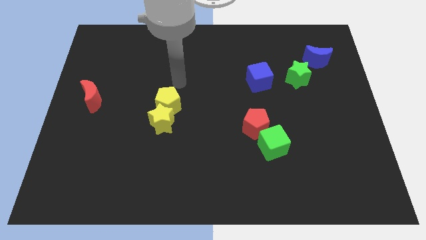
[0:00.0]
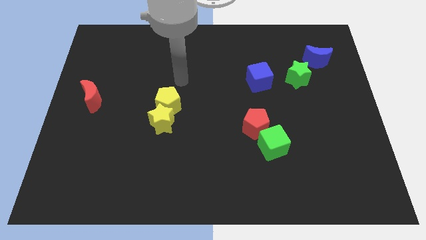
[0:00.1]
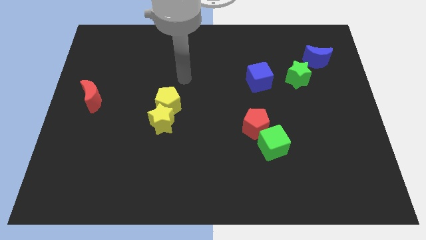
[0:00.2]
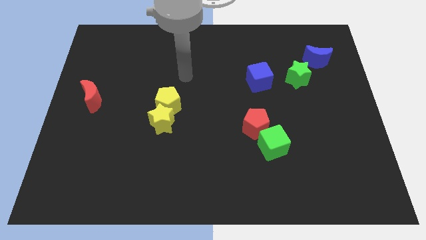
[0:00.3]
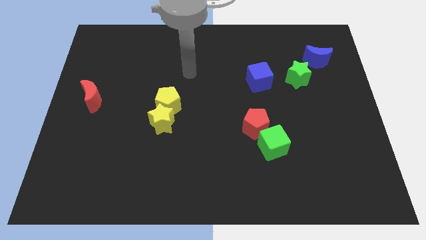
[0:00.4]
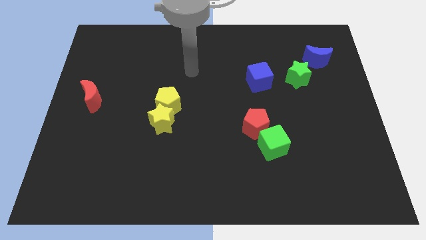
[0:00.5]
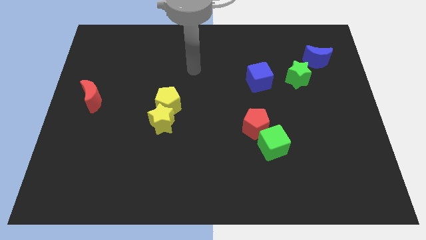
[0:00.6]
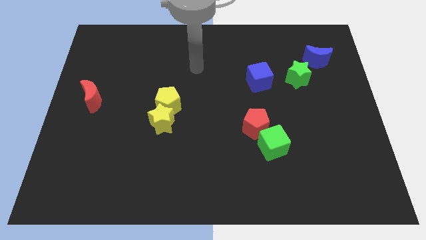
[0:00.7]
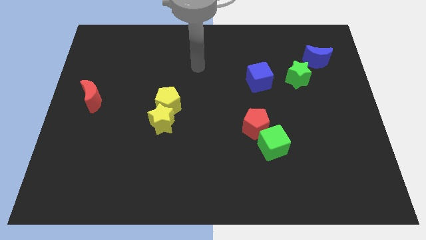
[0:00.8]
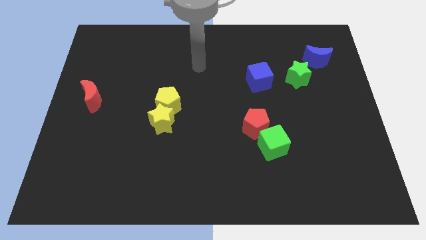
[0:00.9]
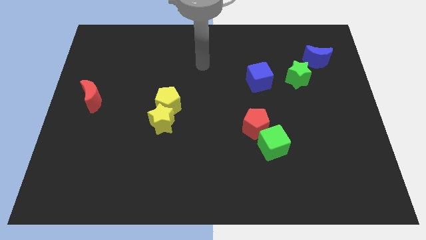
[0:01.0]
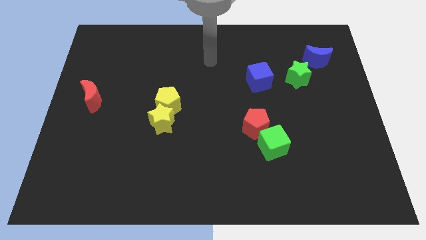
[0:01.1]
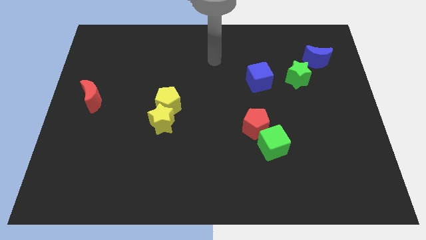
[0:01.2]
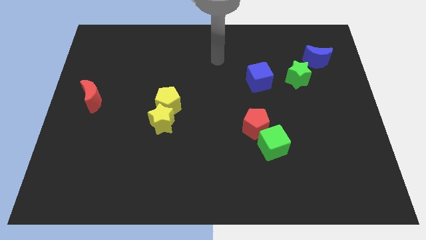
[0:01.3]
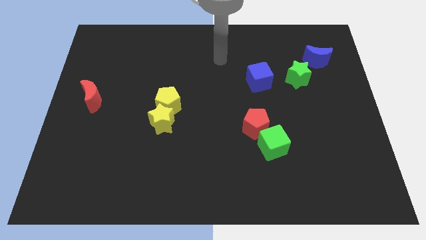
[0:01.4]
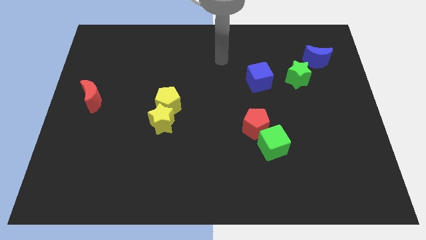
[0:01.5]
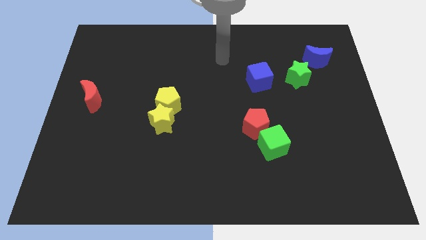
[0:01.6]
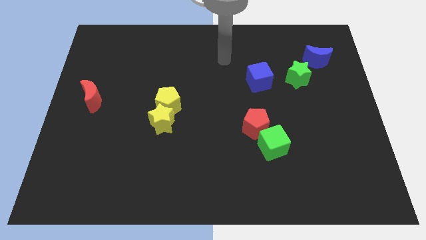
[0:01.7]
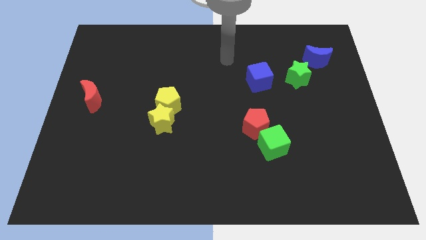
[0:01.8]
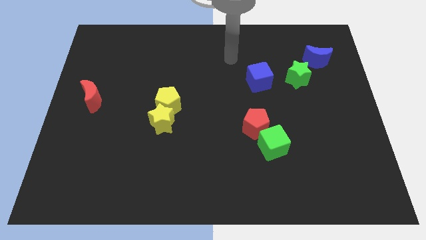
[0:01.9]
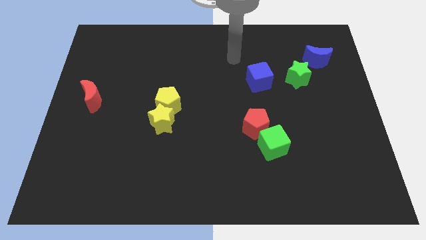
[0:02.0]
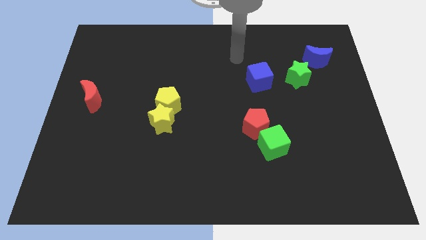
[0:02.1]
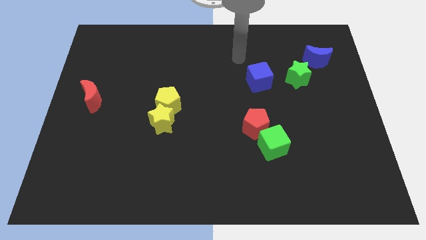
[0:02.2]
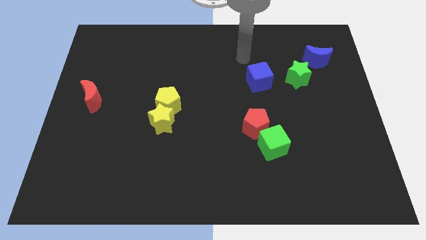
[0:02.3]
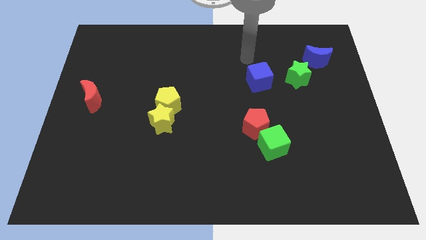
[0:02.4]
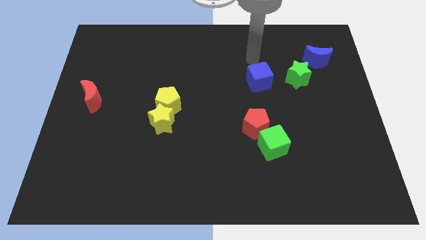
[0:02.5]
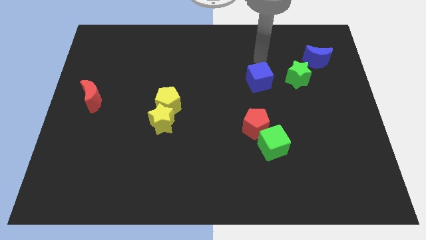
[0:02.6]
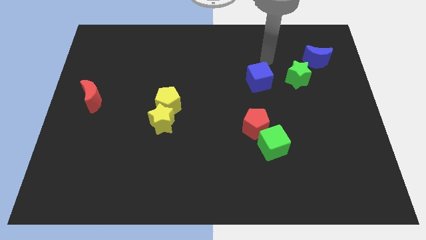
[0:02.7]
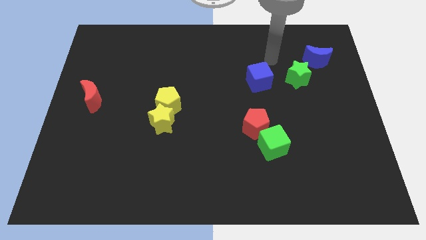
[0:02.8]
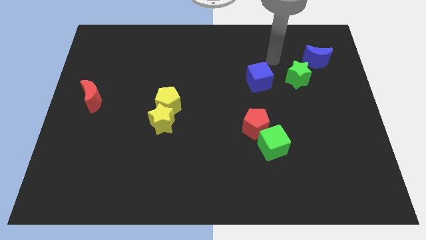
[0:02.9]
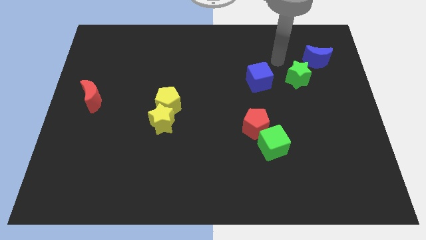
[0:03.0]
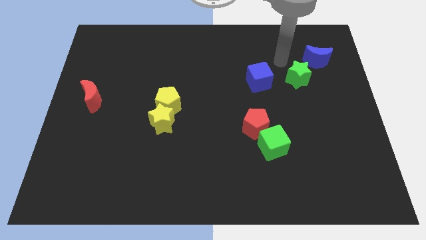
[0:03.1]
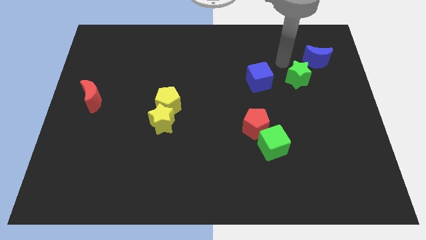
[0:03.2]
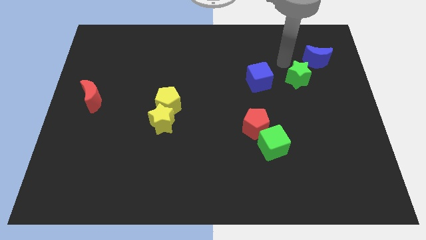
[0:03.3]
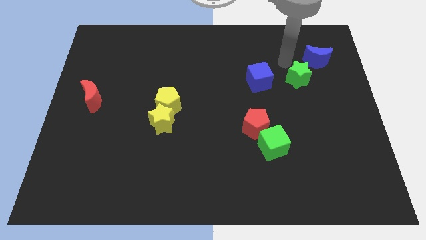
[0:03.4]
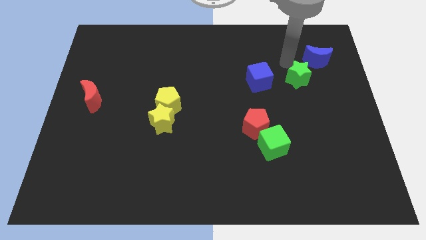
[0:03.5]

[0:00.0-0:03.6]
point your arm at the top of the green star

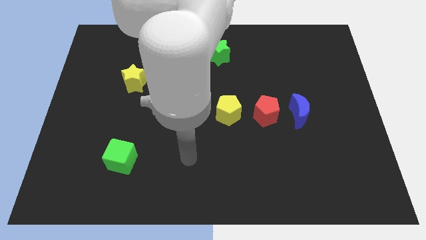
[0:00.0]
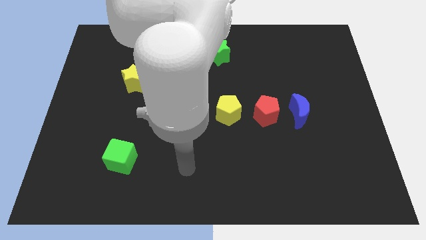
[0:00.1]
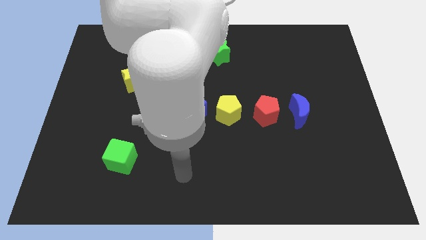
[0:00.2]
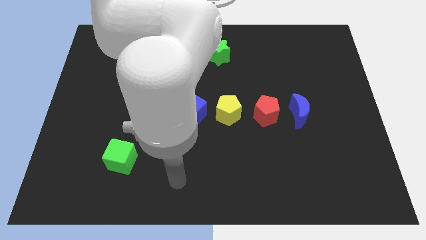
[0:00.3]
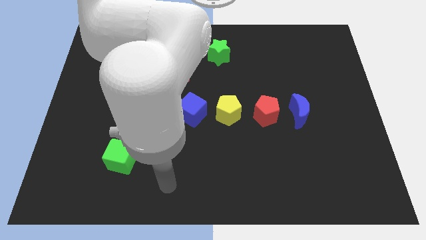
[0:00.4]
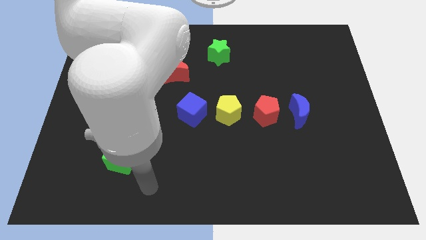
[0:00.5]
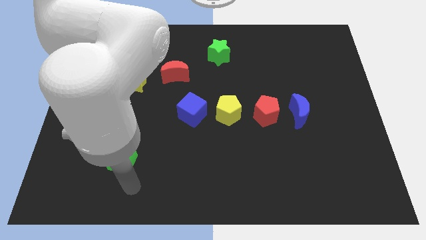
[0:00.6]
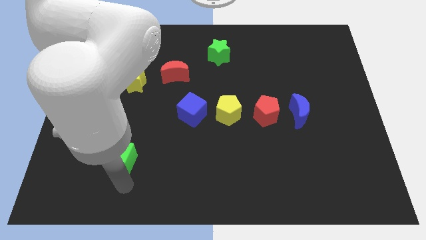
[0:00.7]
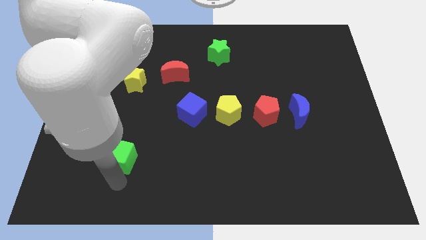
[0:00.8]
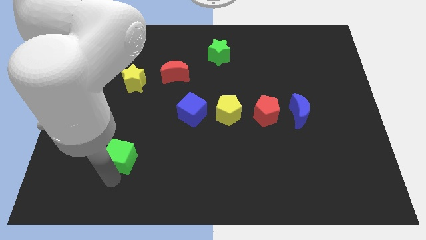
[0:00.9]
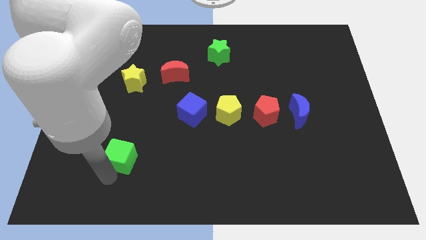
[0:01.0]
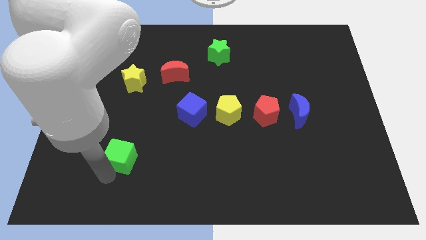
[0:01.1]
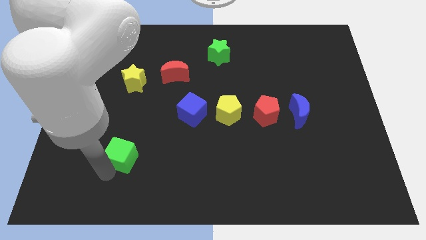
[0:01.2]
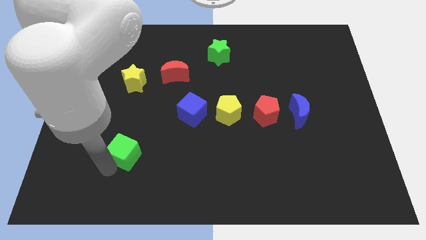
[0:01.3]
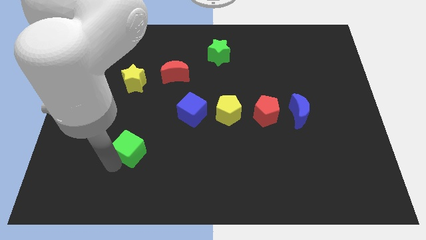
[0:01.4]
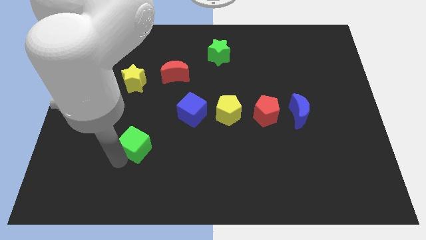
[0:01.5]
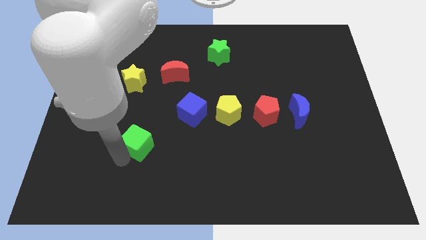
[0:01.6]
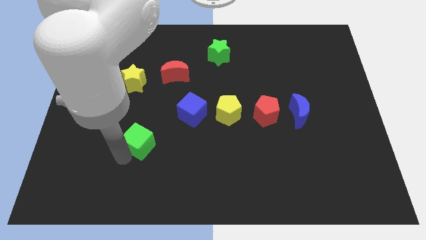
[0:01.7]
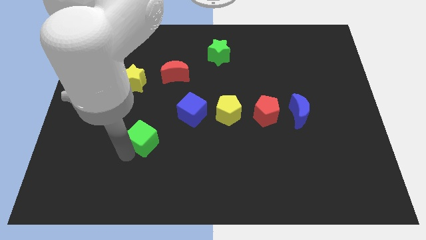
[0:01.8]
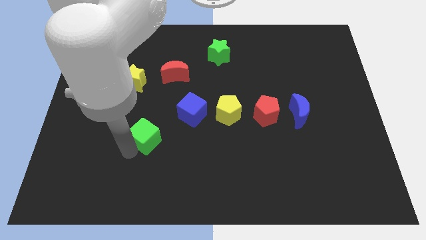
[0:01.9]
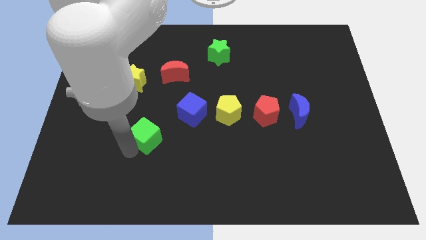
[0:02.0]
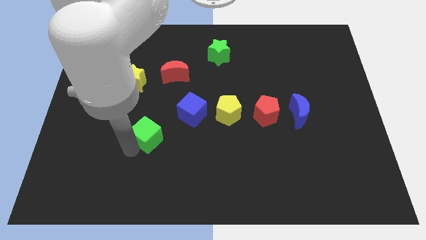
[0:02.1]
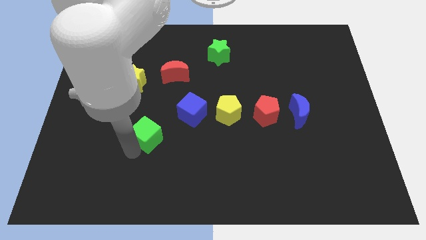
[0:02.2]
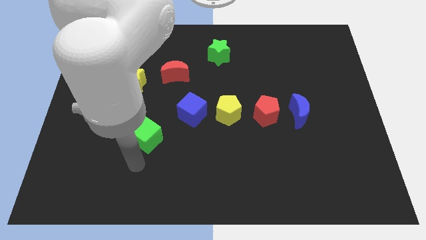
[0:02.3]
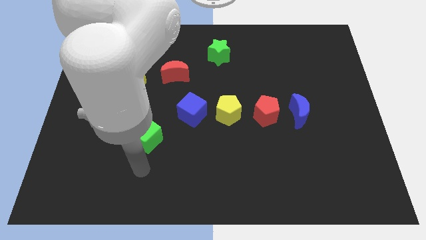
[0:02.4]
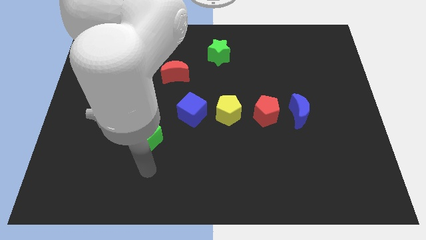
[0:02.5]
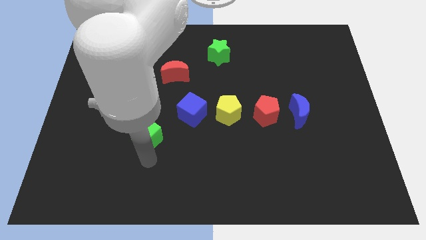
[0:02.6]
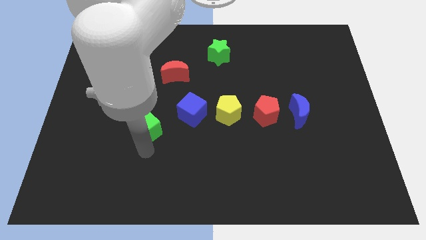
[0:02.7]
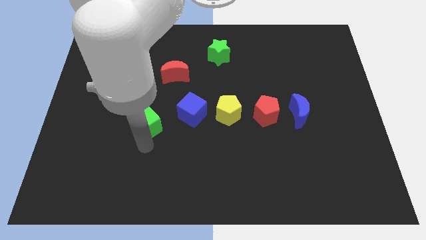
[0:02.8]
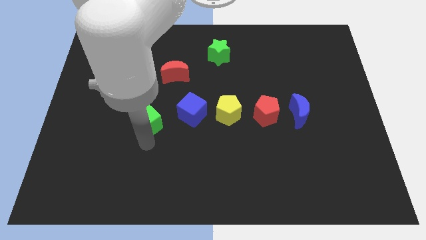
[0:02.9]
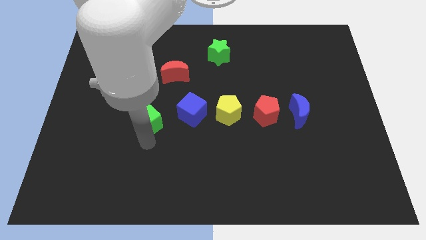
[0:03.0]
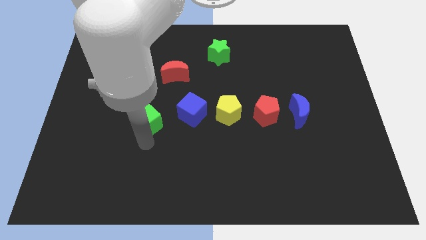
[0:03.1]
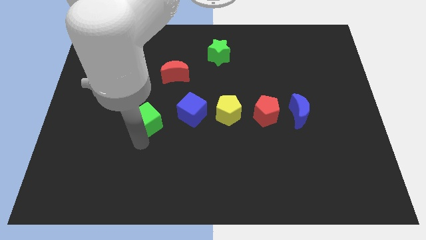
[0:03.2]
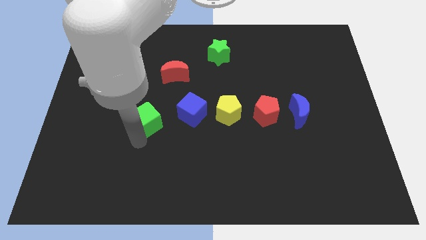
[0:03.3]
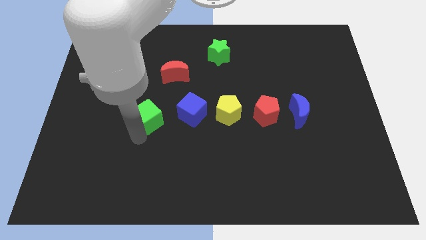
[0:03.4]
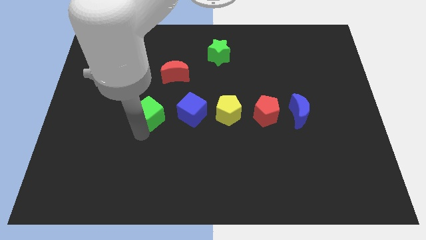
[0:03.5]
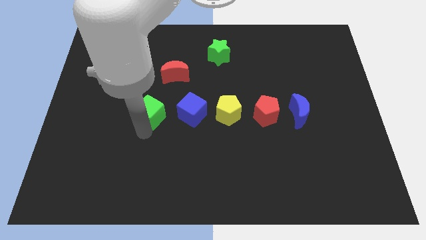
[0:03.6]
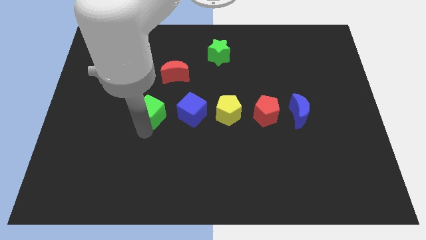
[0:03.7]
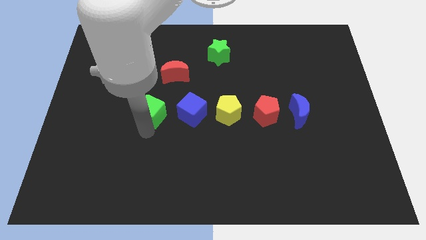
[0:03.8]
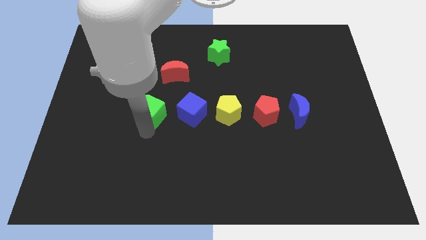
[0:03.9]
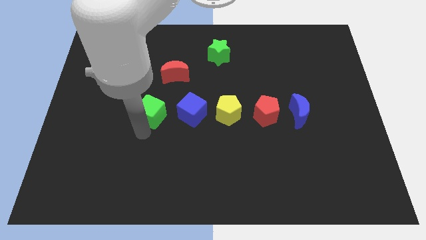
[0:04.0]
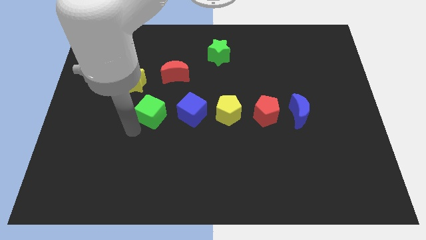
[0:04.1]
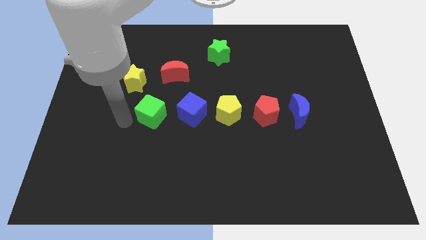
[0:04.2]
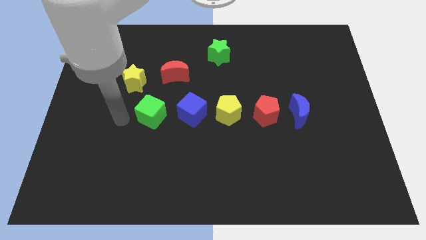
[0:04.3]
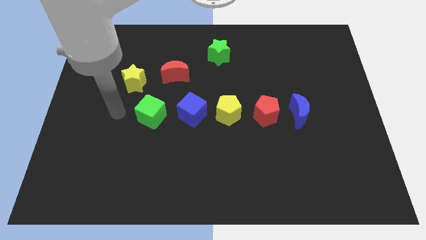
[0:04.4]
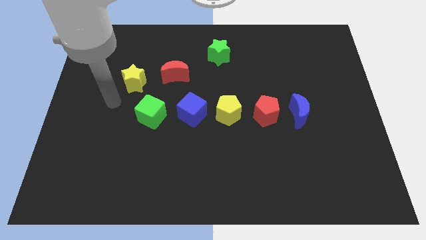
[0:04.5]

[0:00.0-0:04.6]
push the green cube to the left side of the blue cube

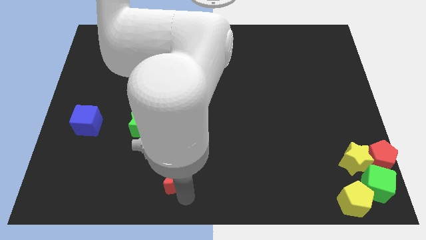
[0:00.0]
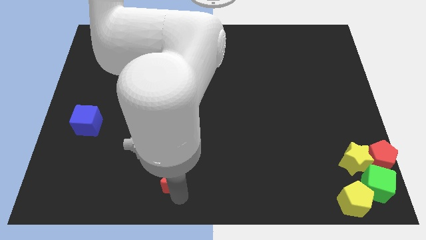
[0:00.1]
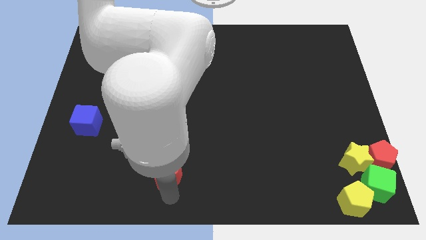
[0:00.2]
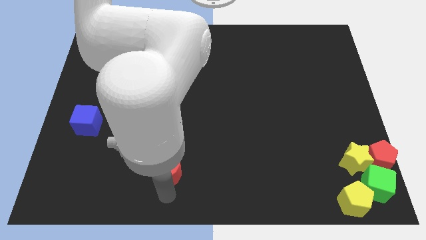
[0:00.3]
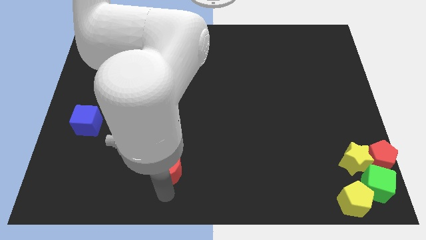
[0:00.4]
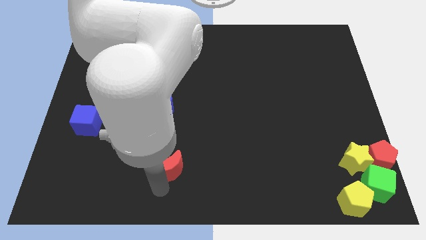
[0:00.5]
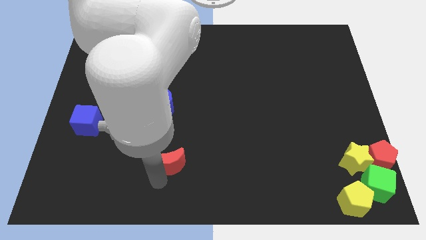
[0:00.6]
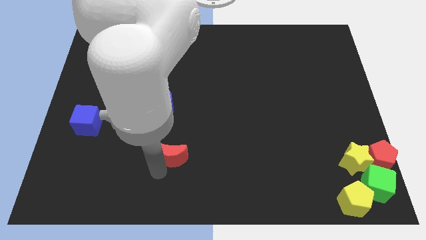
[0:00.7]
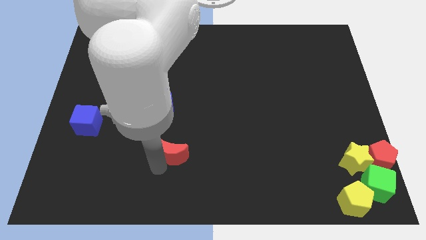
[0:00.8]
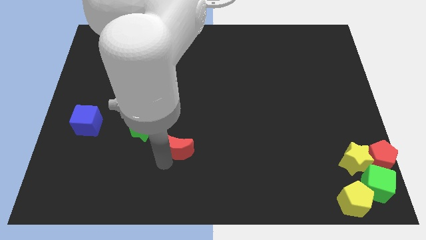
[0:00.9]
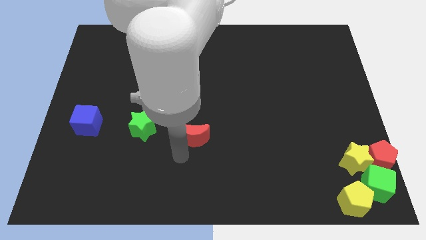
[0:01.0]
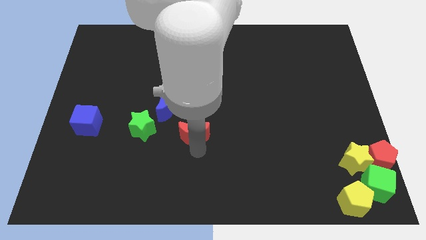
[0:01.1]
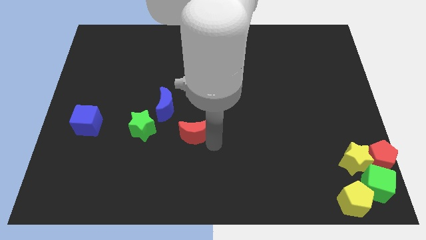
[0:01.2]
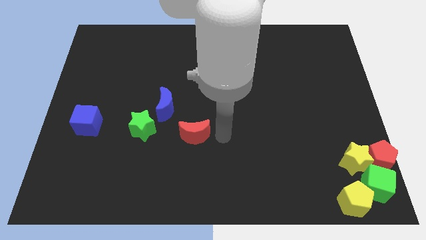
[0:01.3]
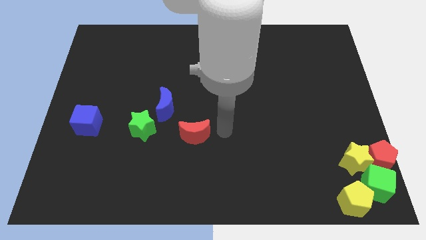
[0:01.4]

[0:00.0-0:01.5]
move red moon slightly towards the top side of the board
